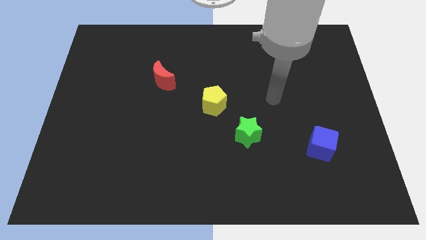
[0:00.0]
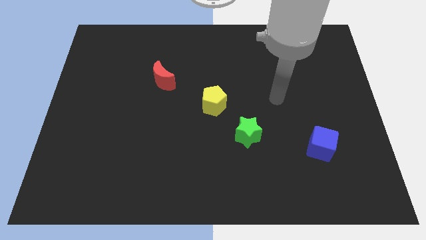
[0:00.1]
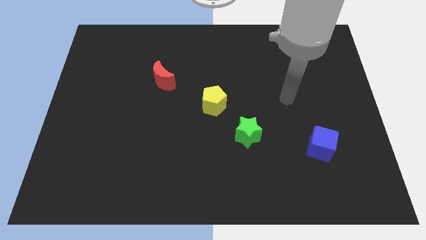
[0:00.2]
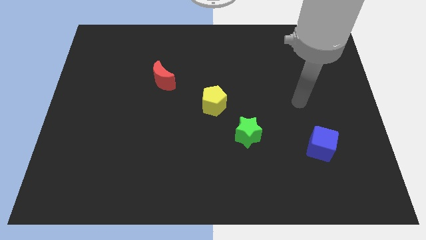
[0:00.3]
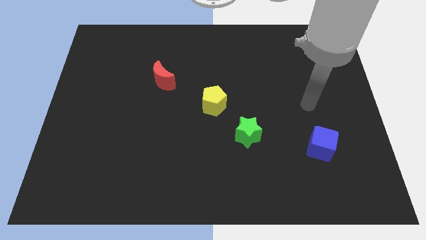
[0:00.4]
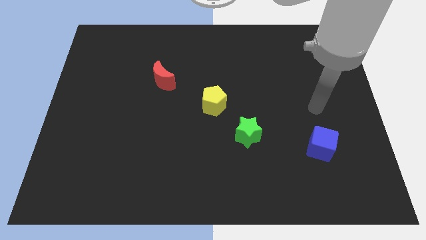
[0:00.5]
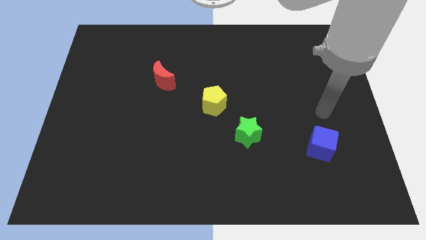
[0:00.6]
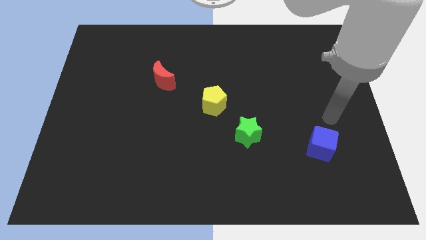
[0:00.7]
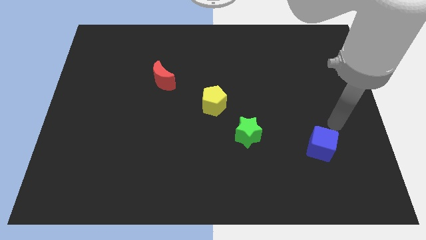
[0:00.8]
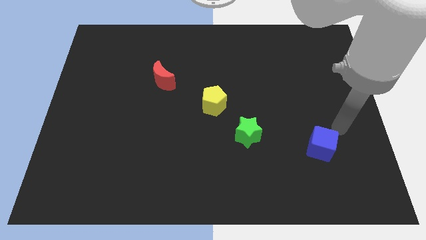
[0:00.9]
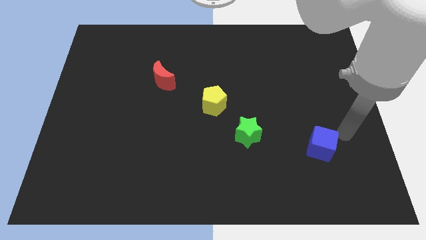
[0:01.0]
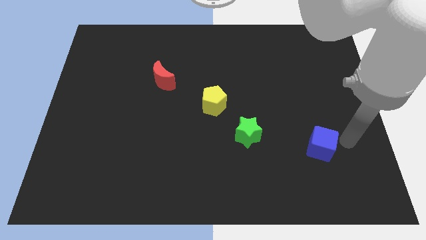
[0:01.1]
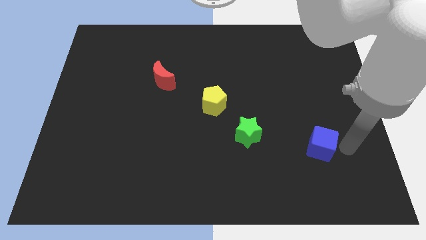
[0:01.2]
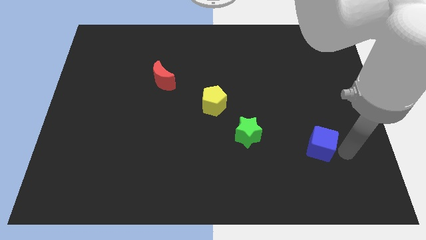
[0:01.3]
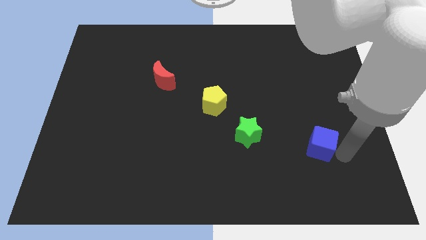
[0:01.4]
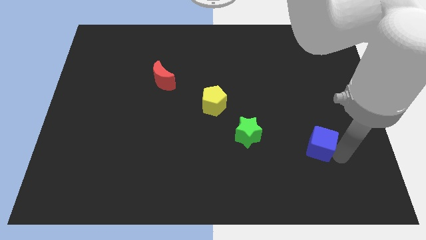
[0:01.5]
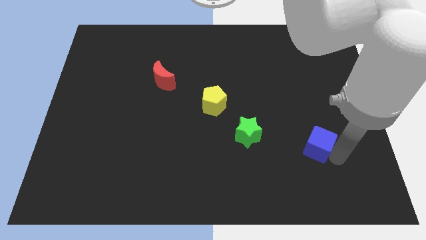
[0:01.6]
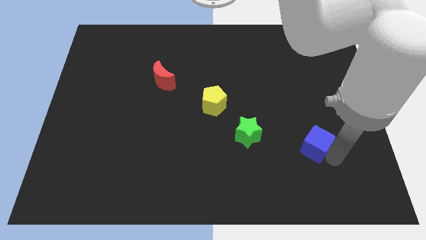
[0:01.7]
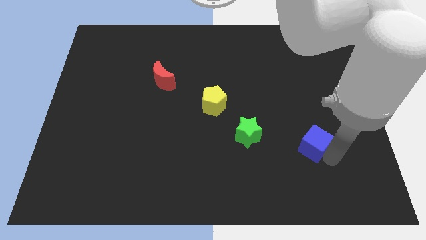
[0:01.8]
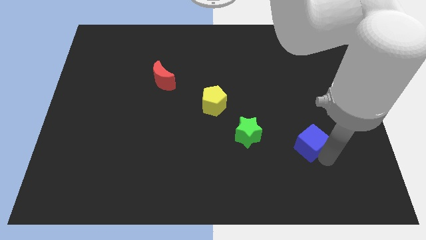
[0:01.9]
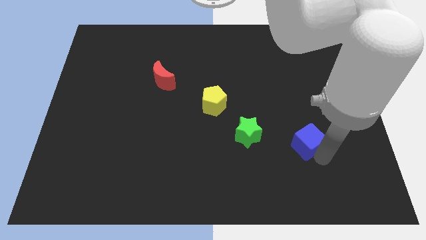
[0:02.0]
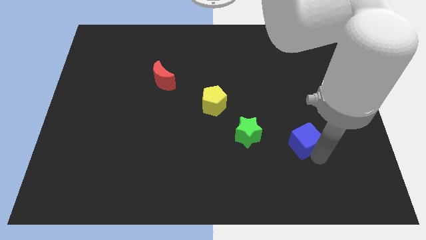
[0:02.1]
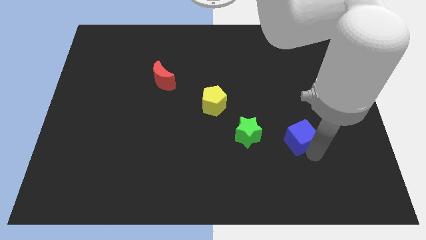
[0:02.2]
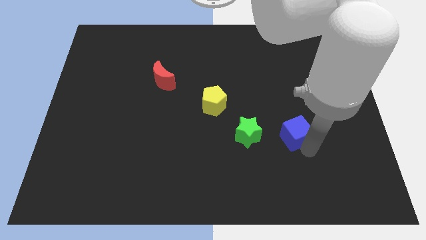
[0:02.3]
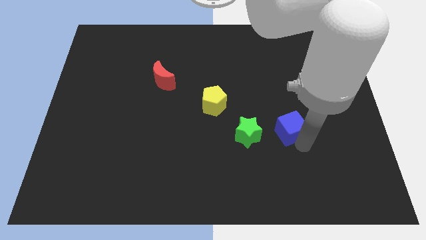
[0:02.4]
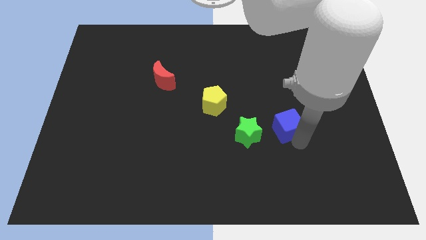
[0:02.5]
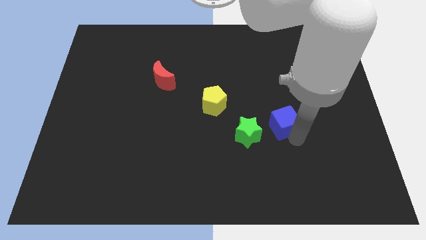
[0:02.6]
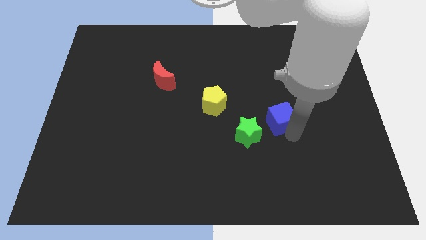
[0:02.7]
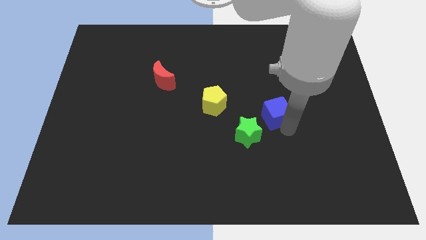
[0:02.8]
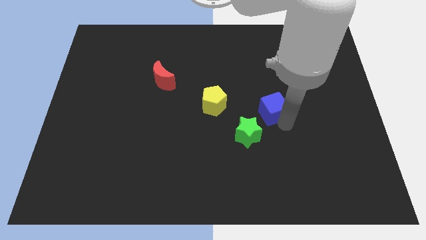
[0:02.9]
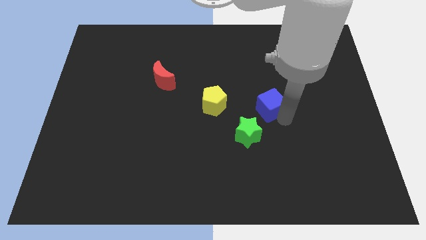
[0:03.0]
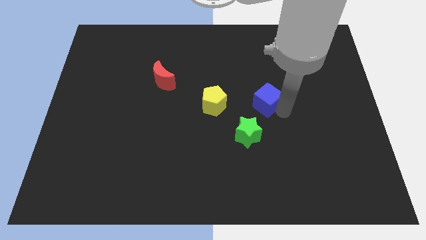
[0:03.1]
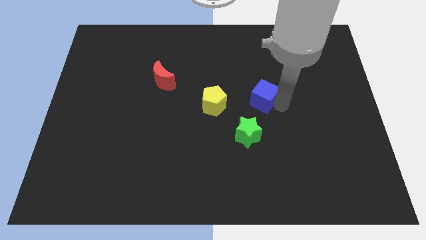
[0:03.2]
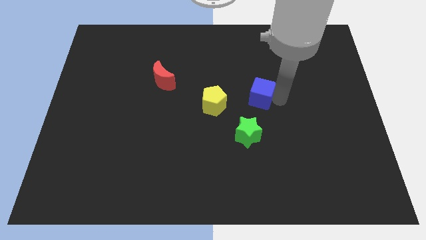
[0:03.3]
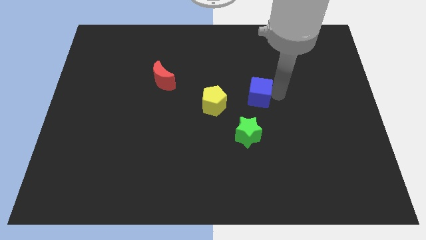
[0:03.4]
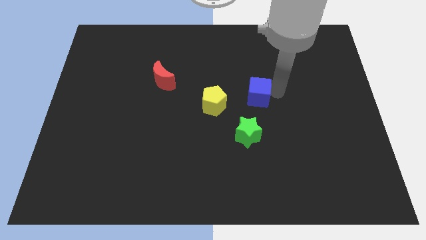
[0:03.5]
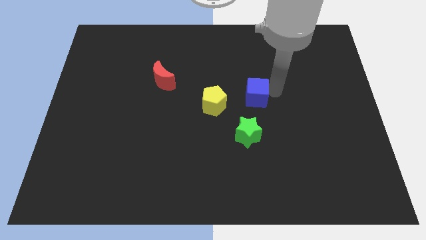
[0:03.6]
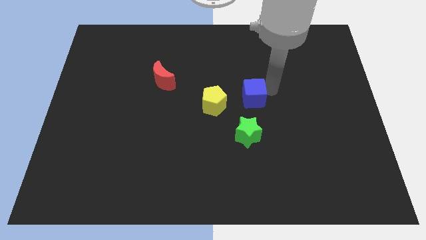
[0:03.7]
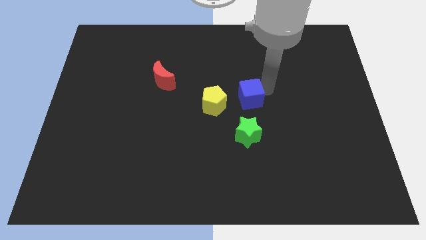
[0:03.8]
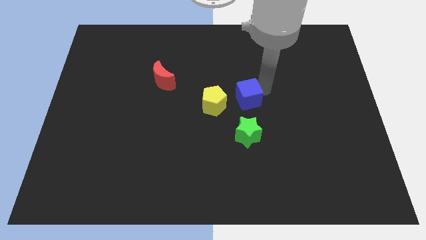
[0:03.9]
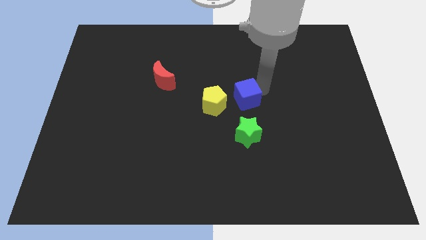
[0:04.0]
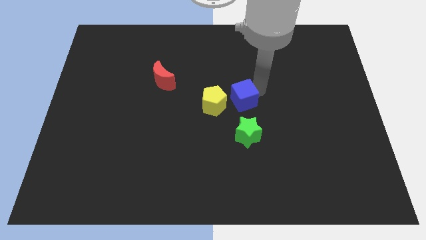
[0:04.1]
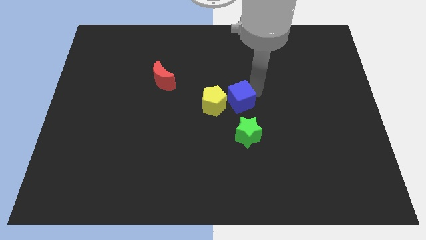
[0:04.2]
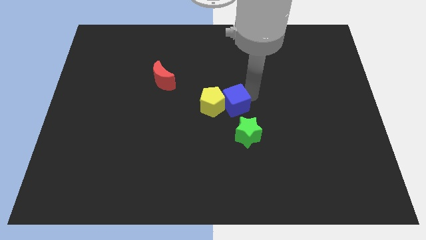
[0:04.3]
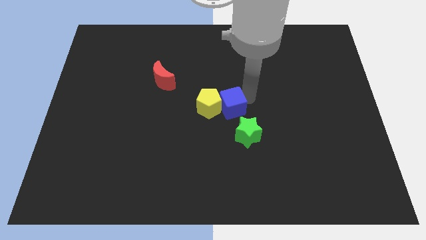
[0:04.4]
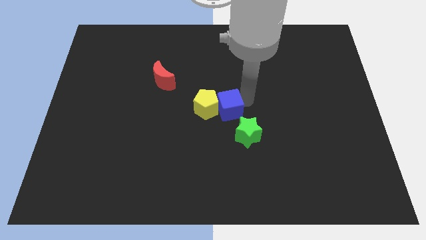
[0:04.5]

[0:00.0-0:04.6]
move the blue cube towards the yellow block

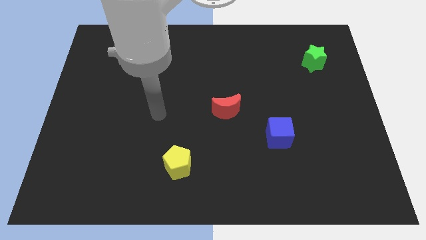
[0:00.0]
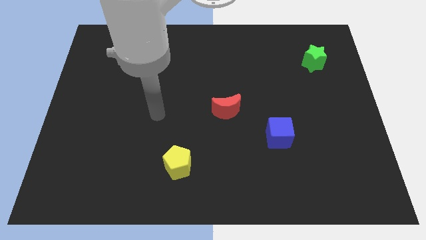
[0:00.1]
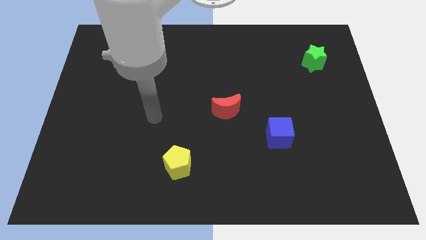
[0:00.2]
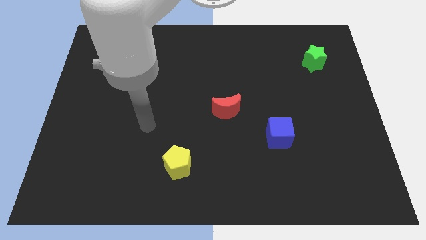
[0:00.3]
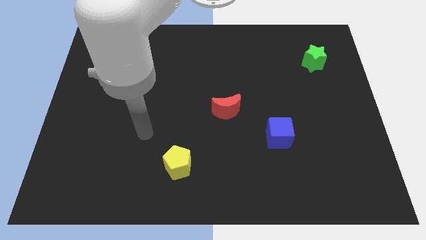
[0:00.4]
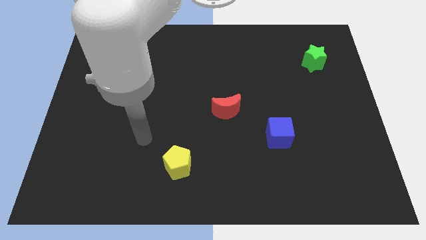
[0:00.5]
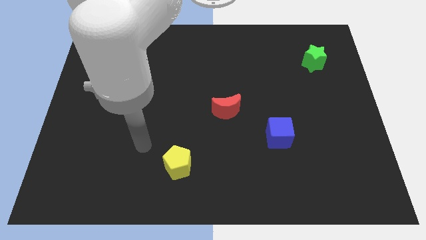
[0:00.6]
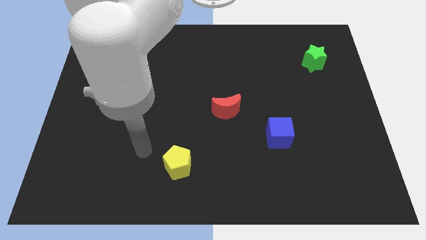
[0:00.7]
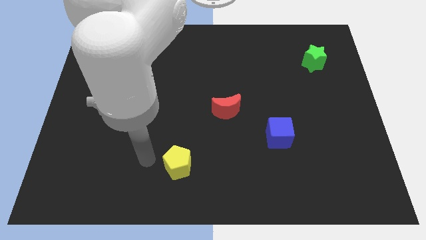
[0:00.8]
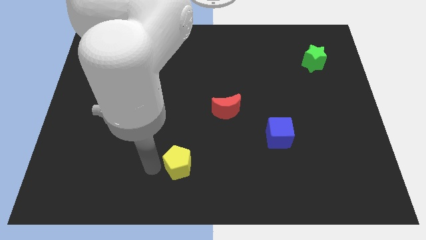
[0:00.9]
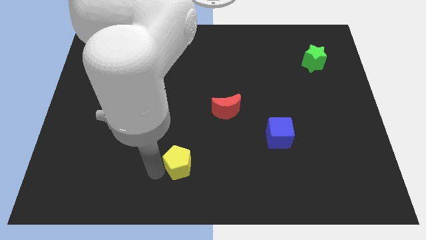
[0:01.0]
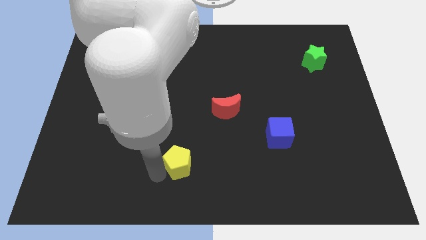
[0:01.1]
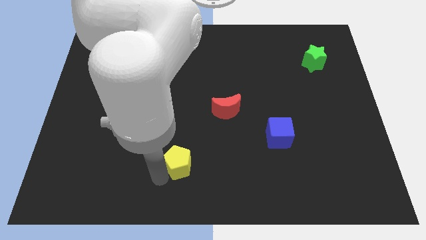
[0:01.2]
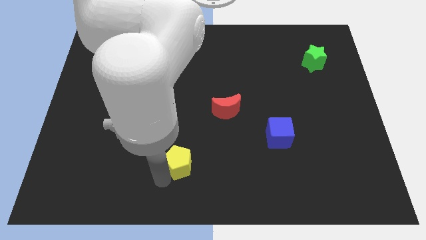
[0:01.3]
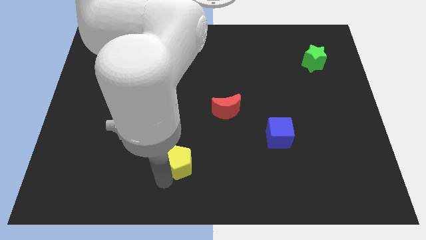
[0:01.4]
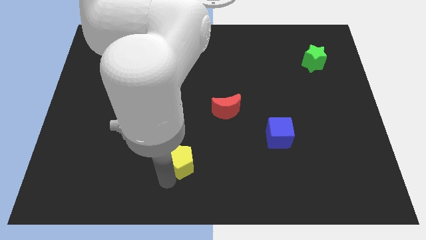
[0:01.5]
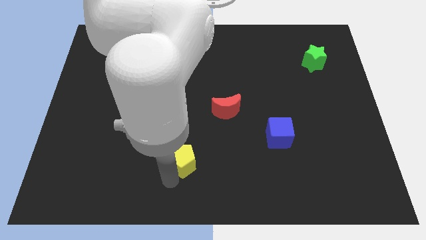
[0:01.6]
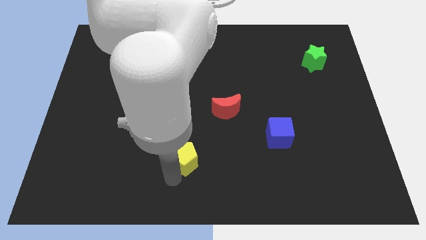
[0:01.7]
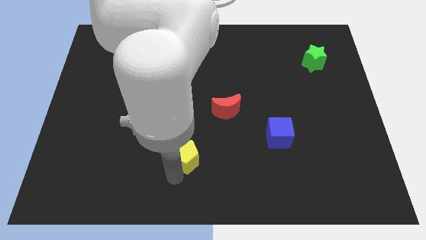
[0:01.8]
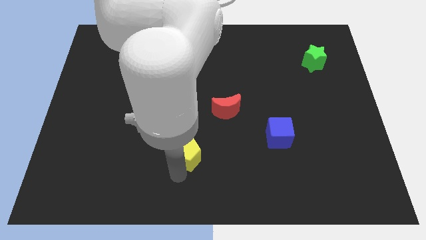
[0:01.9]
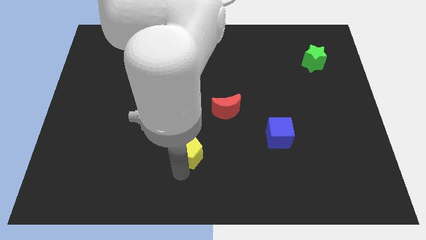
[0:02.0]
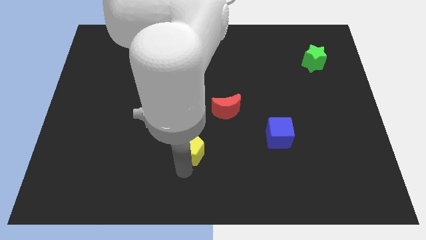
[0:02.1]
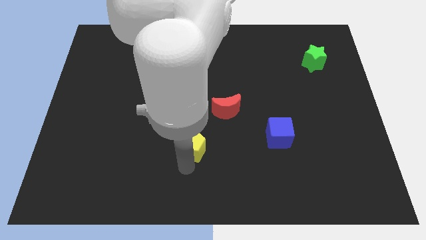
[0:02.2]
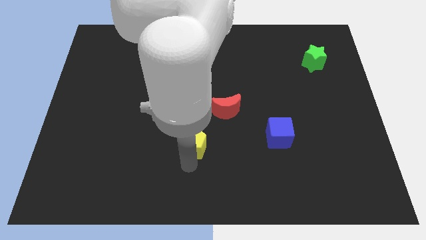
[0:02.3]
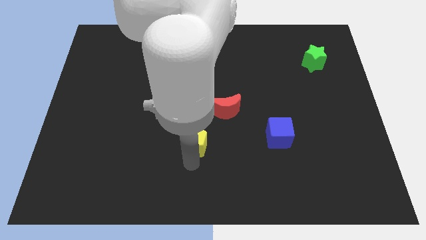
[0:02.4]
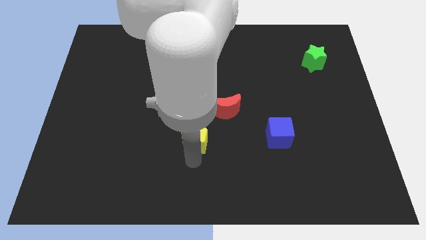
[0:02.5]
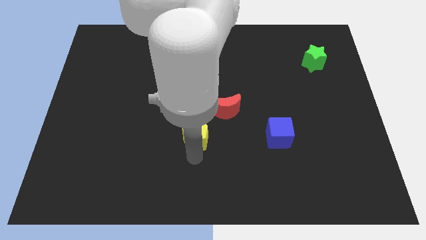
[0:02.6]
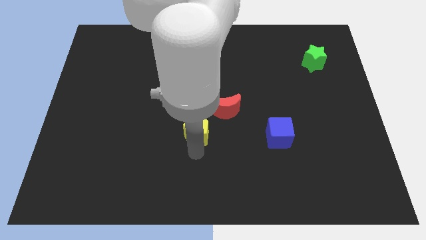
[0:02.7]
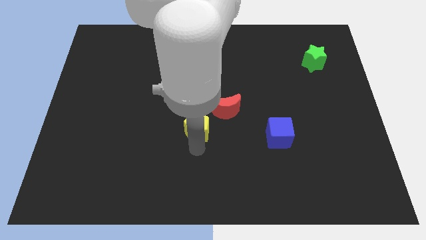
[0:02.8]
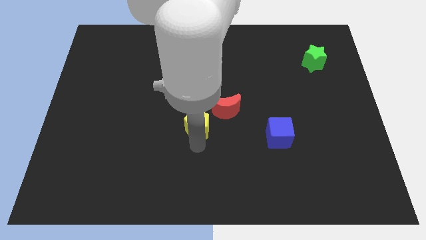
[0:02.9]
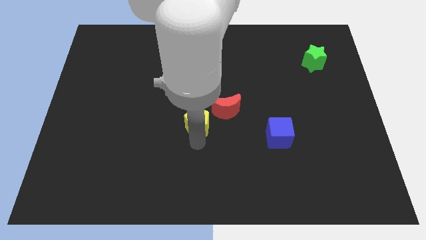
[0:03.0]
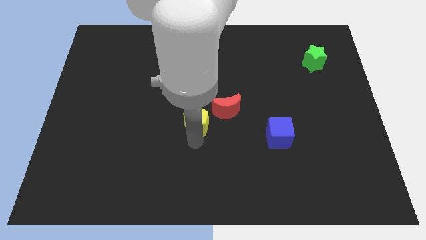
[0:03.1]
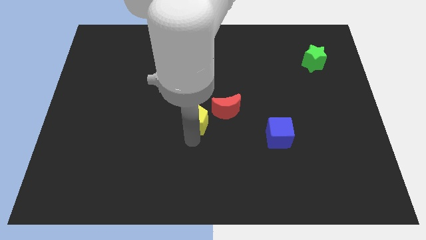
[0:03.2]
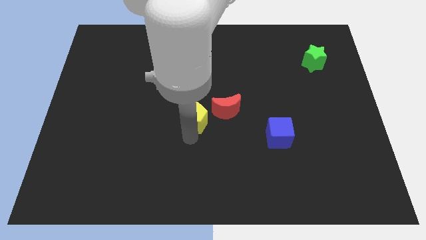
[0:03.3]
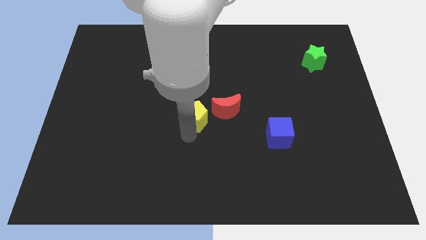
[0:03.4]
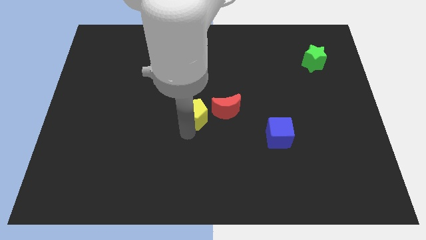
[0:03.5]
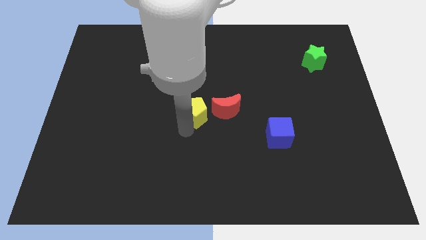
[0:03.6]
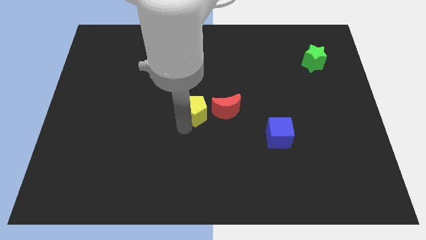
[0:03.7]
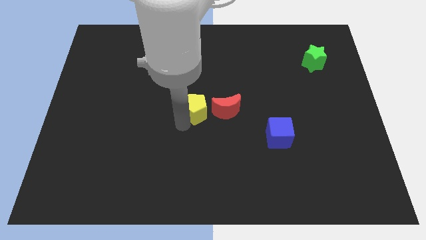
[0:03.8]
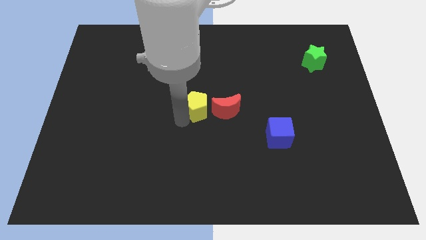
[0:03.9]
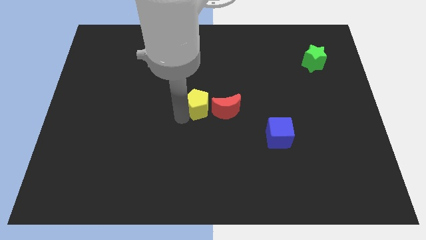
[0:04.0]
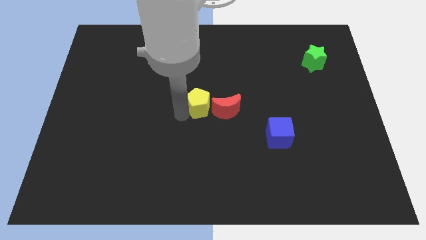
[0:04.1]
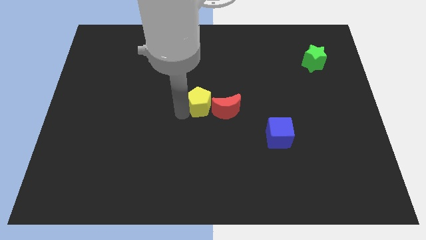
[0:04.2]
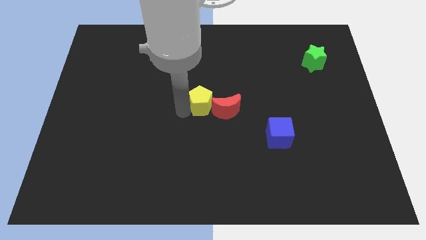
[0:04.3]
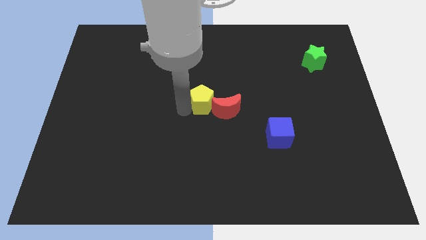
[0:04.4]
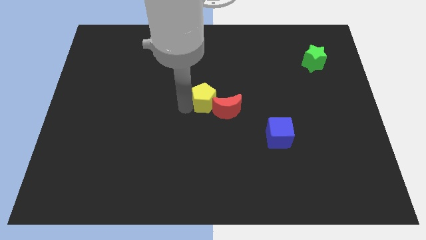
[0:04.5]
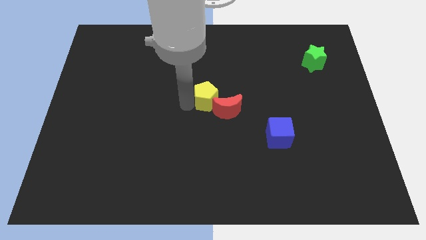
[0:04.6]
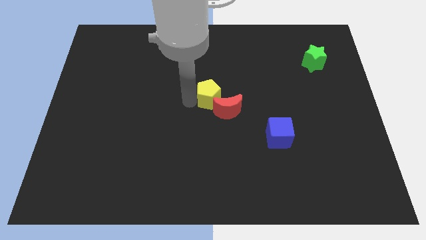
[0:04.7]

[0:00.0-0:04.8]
put the pentagon close to the red block
